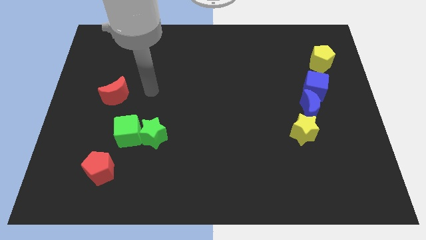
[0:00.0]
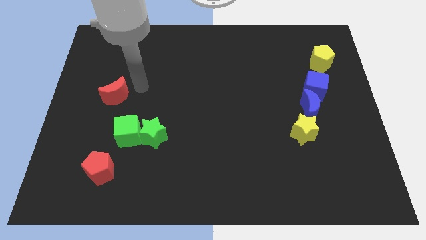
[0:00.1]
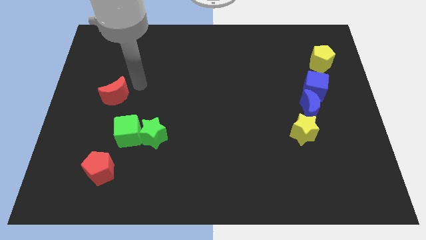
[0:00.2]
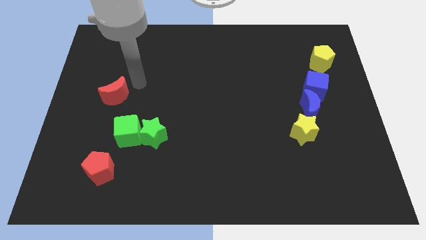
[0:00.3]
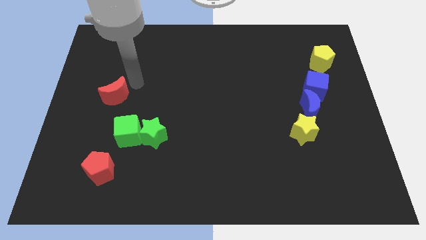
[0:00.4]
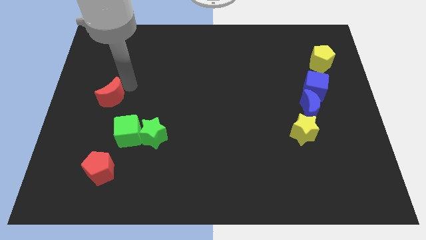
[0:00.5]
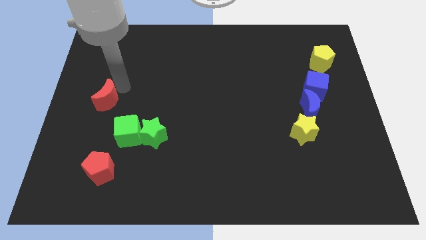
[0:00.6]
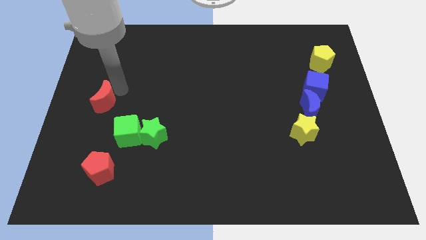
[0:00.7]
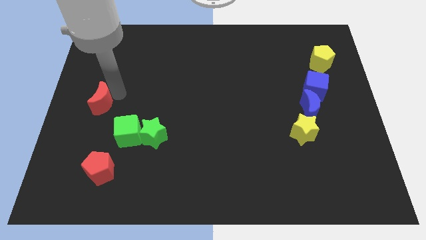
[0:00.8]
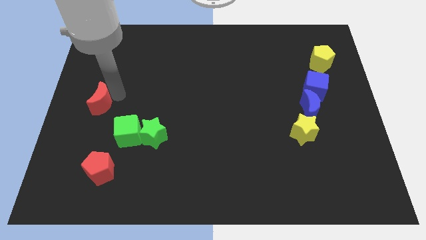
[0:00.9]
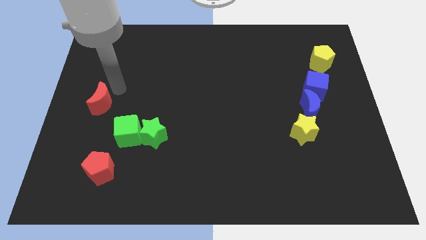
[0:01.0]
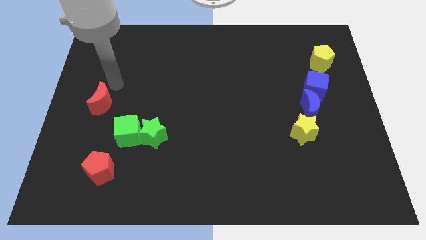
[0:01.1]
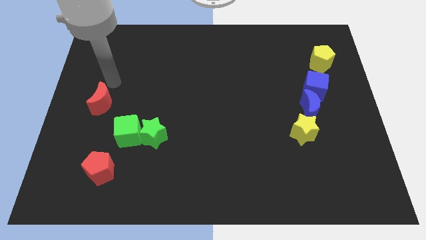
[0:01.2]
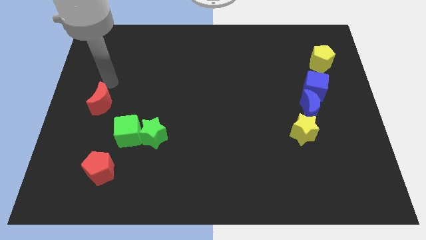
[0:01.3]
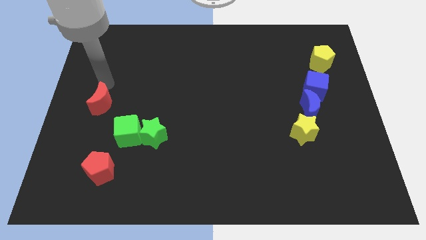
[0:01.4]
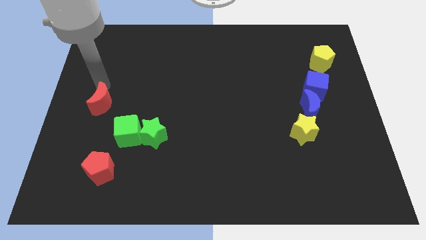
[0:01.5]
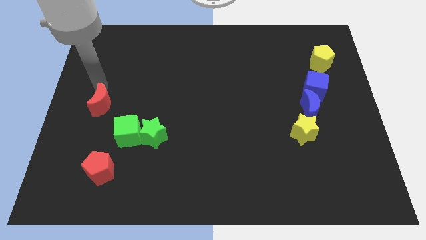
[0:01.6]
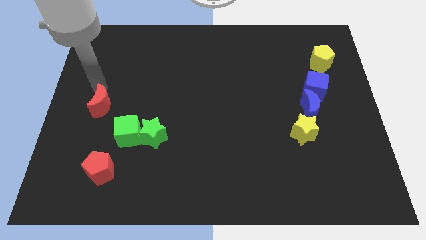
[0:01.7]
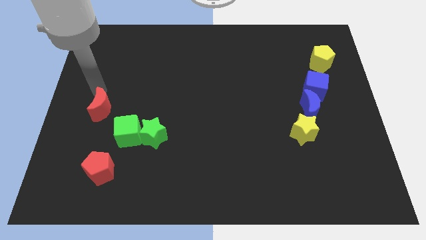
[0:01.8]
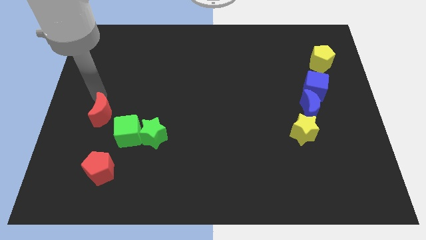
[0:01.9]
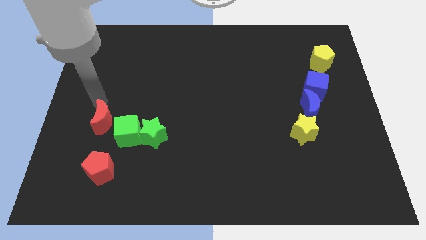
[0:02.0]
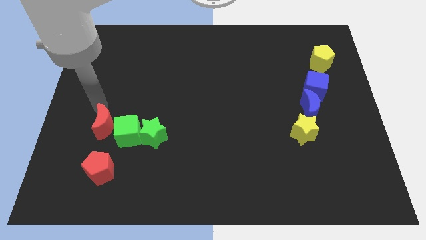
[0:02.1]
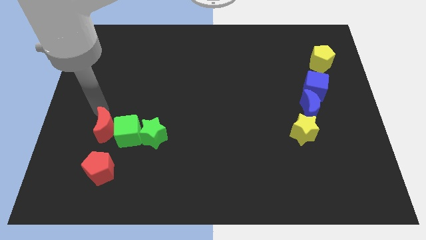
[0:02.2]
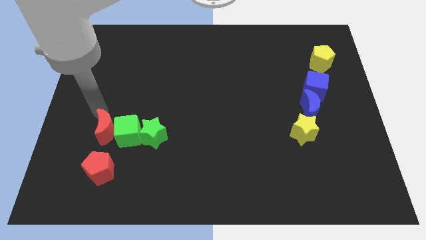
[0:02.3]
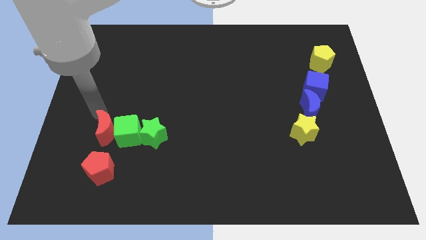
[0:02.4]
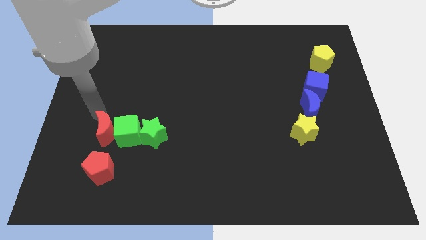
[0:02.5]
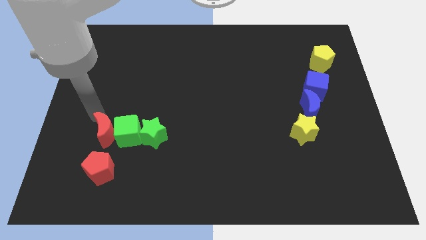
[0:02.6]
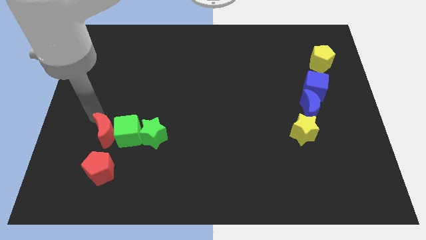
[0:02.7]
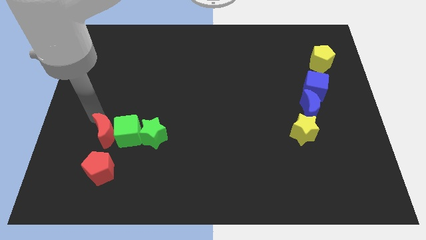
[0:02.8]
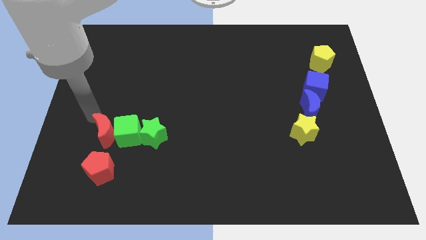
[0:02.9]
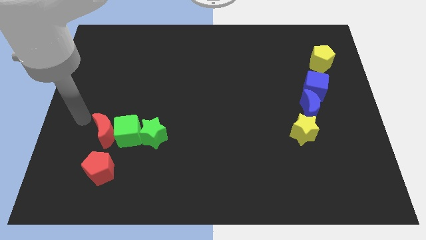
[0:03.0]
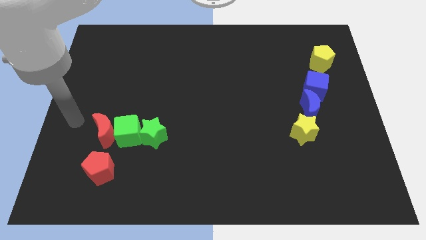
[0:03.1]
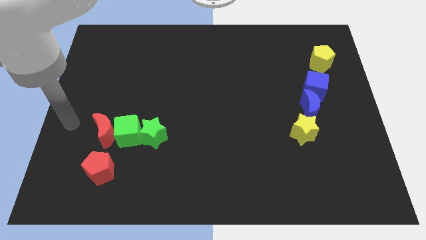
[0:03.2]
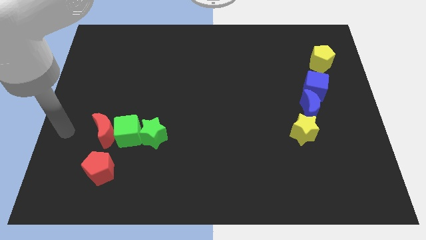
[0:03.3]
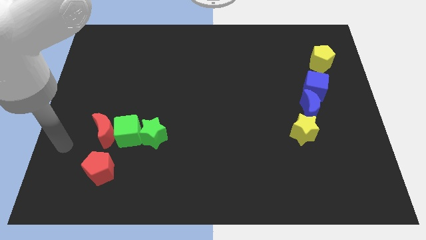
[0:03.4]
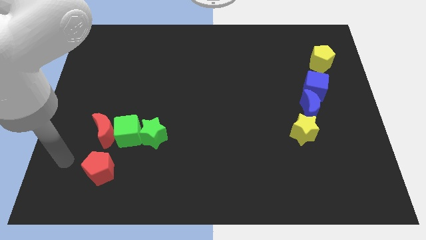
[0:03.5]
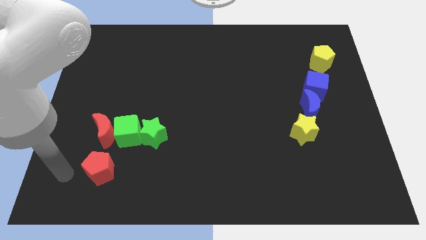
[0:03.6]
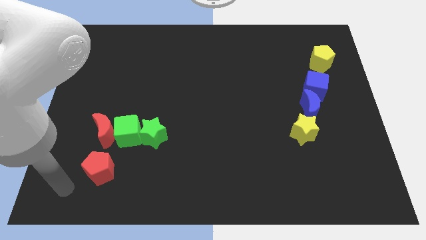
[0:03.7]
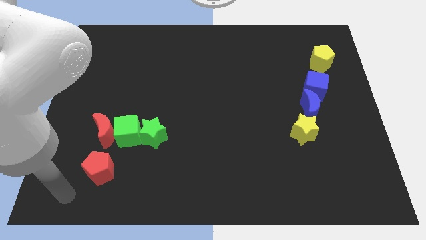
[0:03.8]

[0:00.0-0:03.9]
move the red moon above the red pentagon

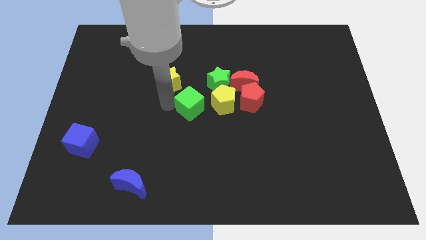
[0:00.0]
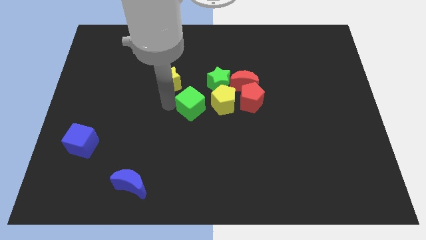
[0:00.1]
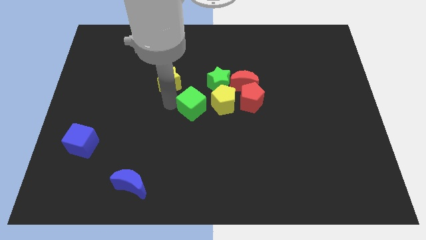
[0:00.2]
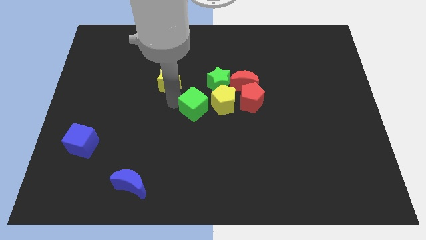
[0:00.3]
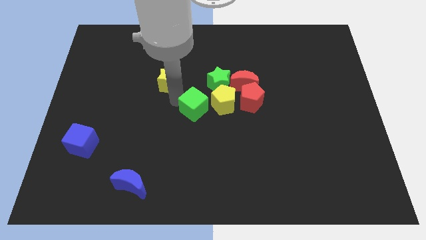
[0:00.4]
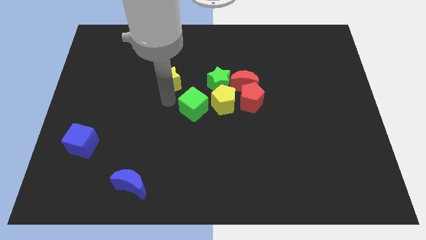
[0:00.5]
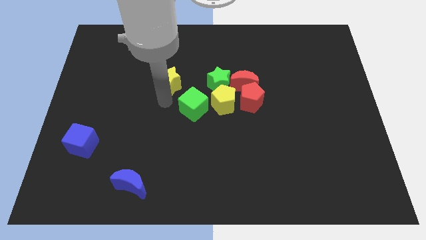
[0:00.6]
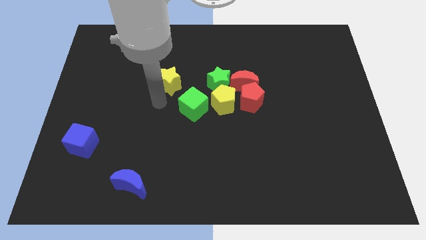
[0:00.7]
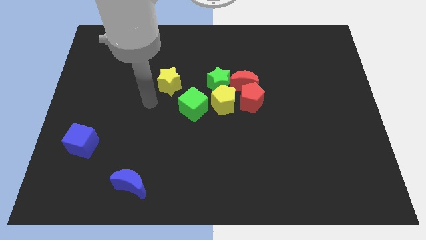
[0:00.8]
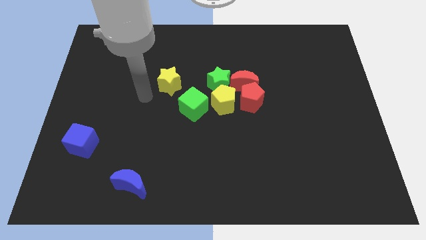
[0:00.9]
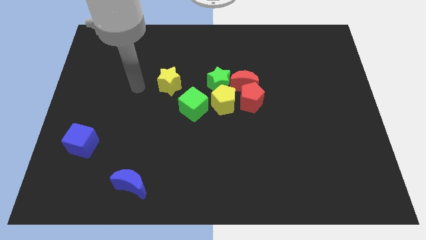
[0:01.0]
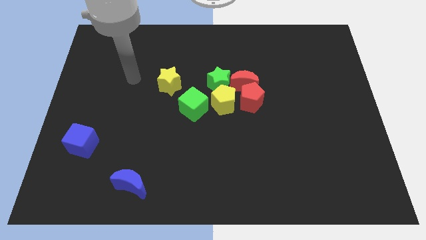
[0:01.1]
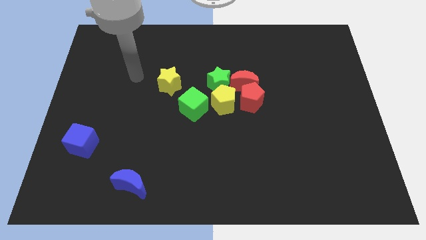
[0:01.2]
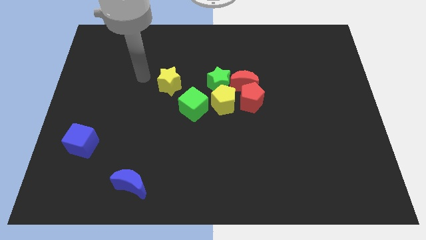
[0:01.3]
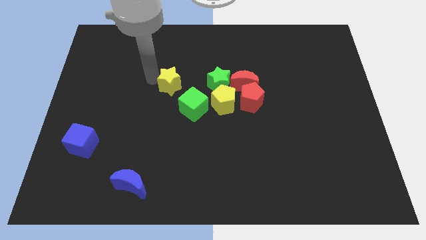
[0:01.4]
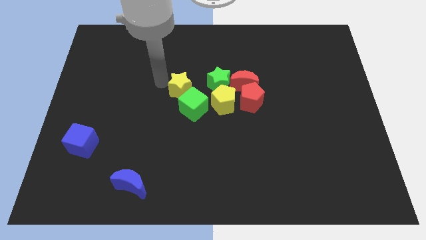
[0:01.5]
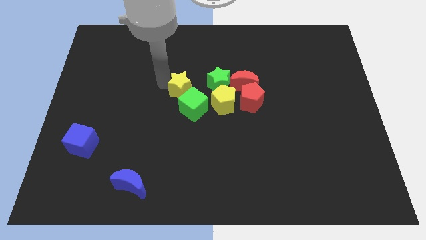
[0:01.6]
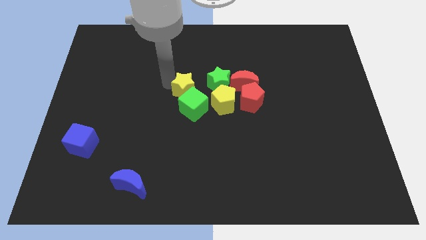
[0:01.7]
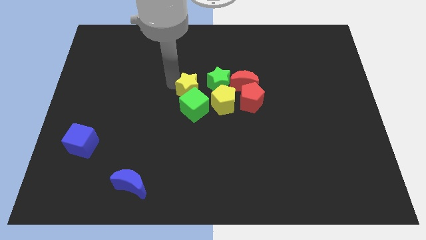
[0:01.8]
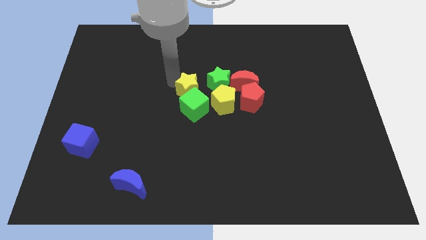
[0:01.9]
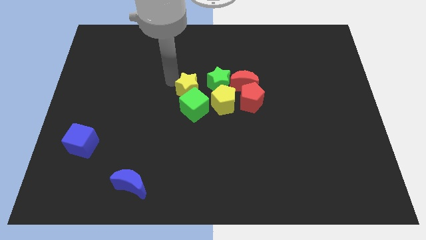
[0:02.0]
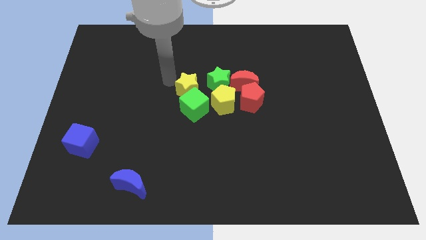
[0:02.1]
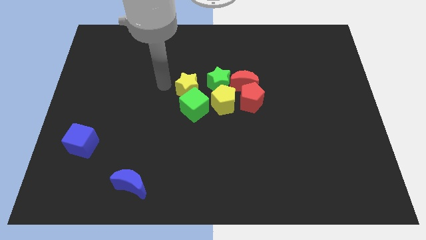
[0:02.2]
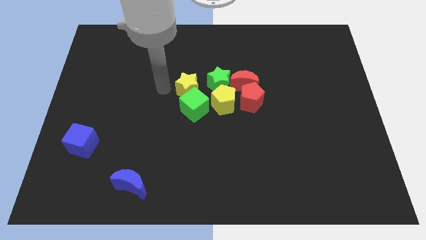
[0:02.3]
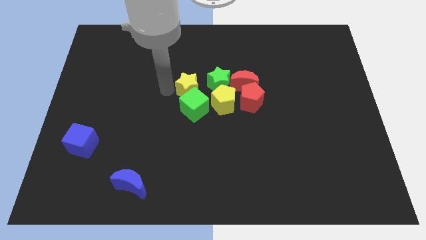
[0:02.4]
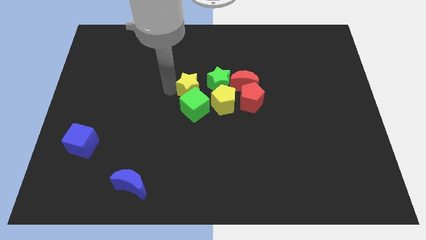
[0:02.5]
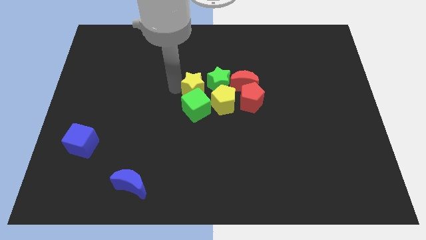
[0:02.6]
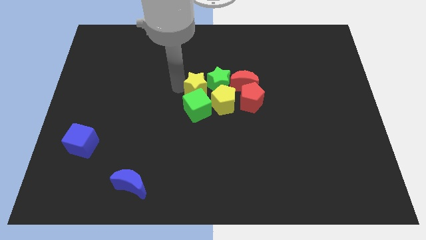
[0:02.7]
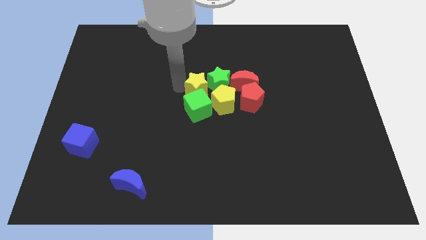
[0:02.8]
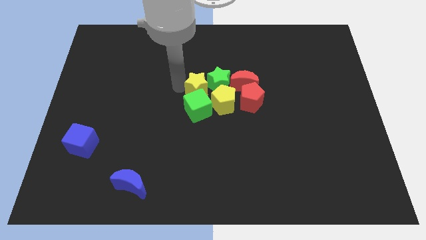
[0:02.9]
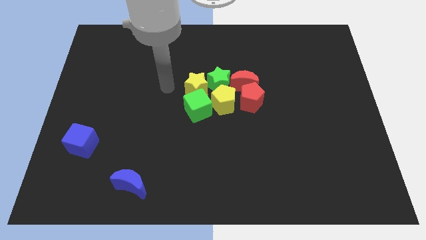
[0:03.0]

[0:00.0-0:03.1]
push the yellow star into the top of the green cube

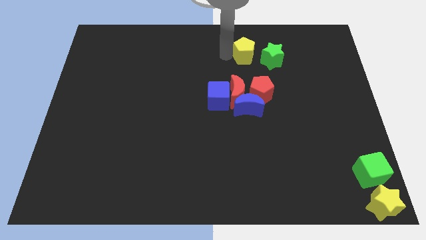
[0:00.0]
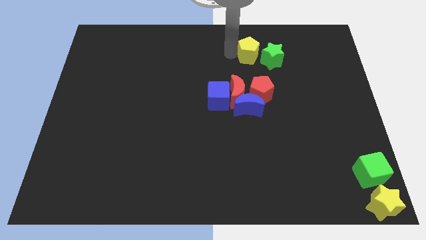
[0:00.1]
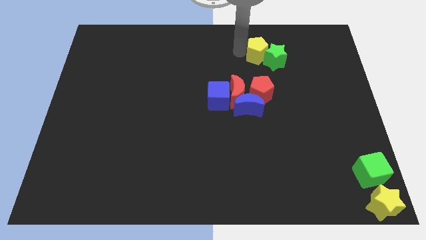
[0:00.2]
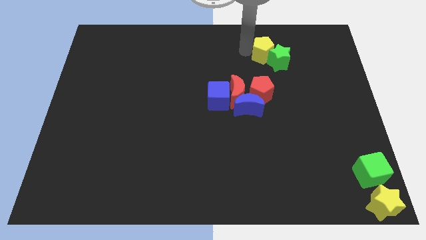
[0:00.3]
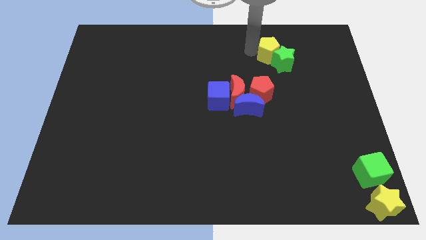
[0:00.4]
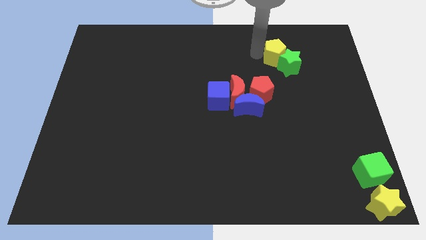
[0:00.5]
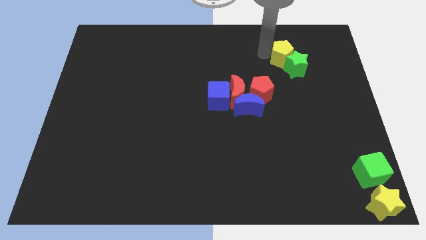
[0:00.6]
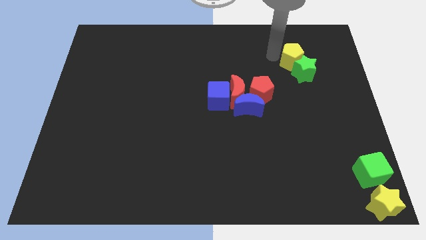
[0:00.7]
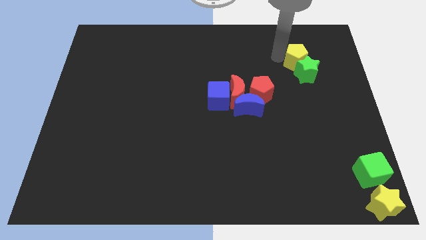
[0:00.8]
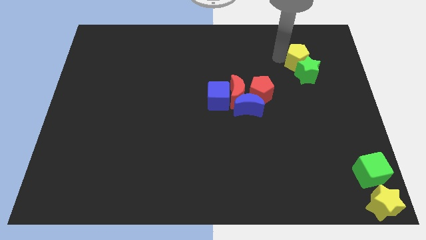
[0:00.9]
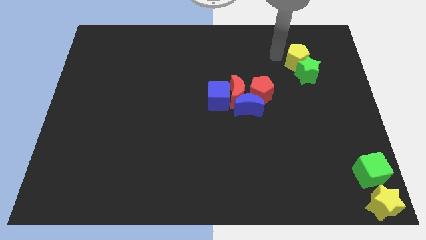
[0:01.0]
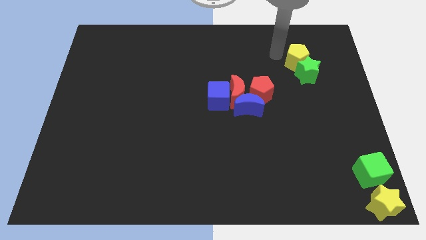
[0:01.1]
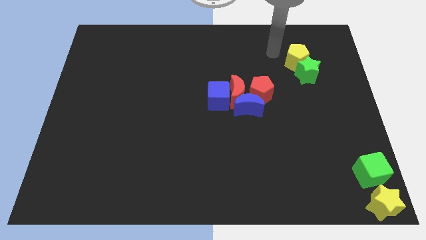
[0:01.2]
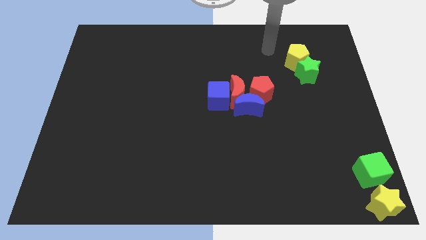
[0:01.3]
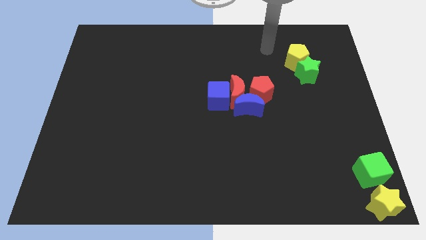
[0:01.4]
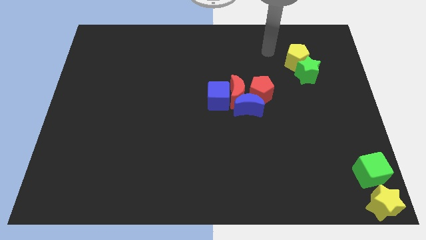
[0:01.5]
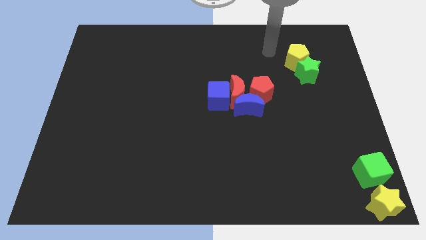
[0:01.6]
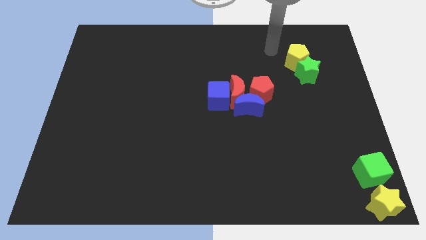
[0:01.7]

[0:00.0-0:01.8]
push the yellow pentagon into the green star
